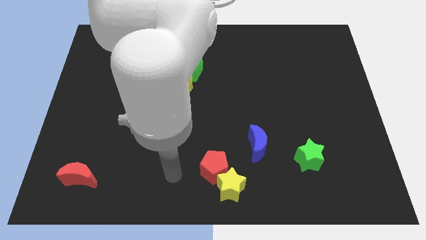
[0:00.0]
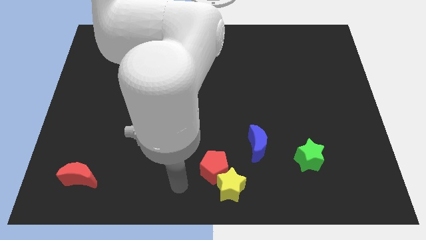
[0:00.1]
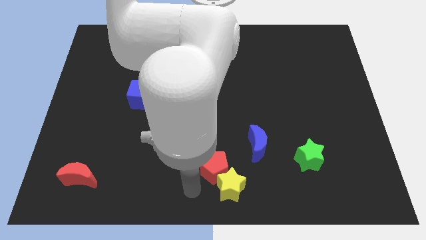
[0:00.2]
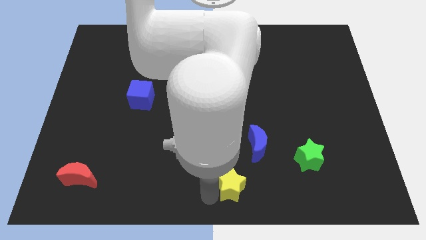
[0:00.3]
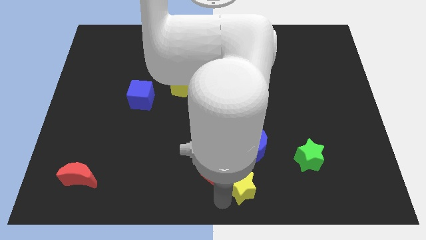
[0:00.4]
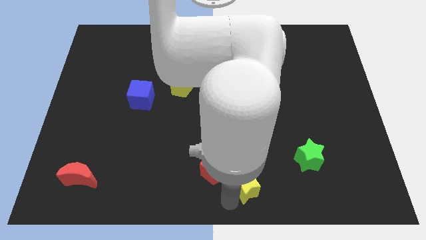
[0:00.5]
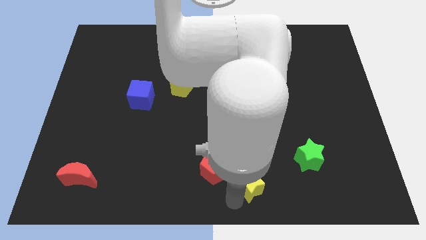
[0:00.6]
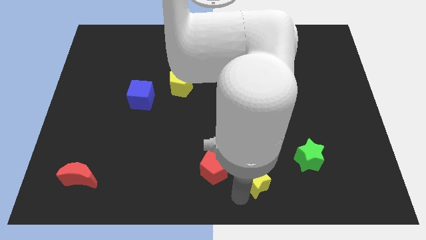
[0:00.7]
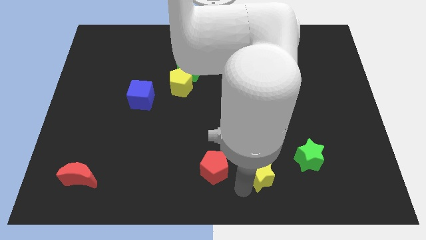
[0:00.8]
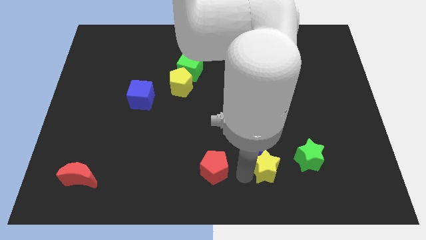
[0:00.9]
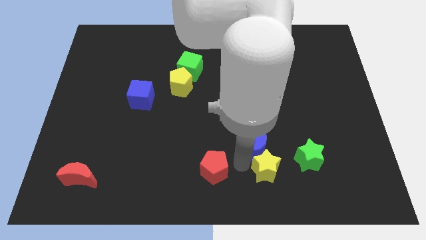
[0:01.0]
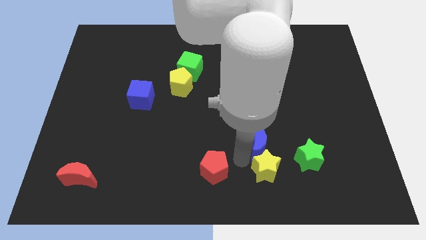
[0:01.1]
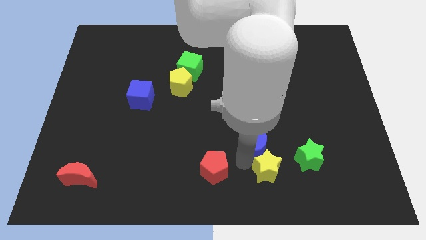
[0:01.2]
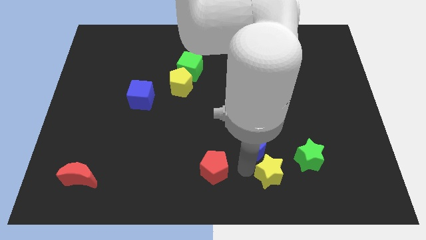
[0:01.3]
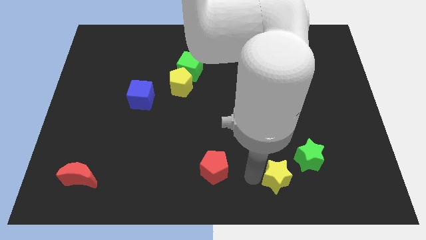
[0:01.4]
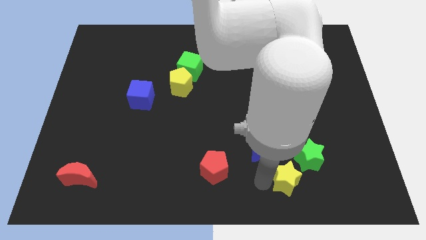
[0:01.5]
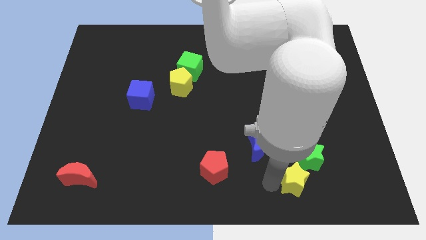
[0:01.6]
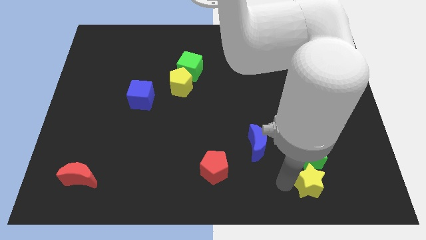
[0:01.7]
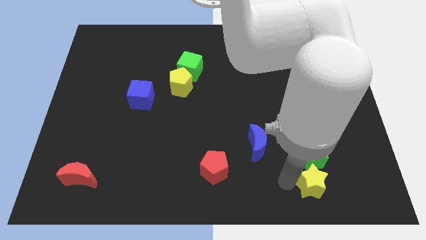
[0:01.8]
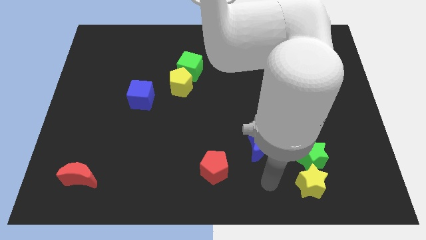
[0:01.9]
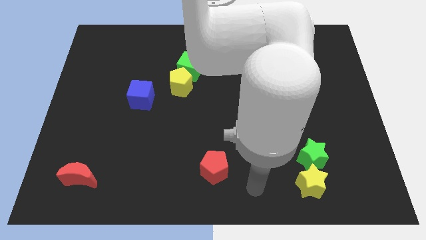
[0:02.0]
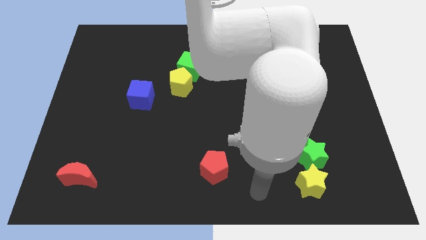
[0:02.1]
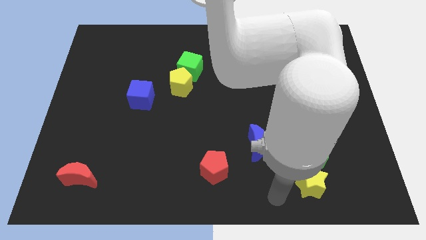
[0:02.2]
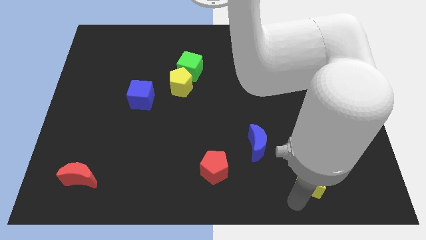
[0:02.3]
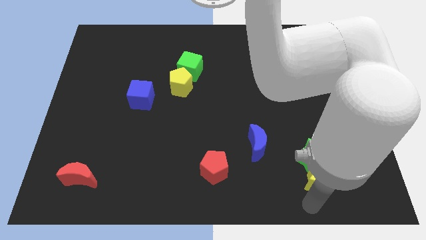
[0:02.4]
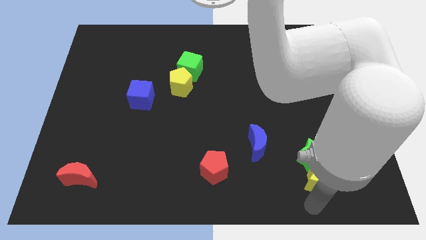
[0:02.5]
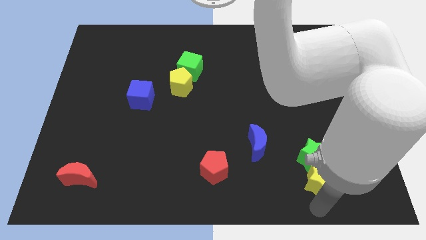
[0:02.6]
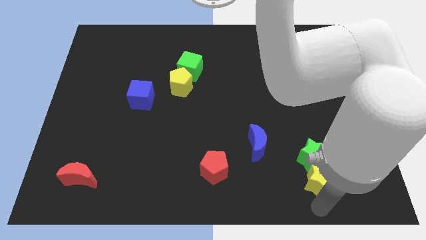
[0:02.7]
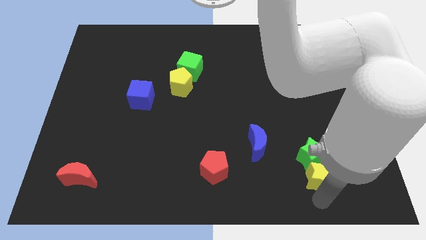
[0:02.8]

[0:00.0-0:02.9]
move yellow star below green star

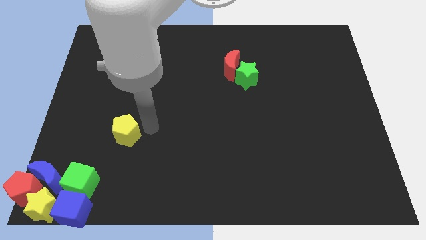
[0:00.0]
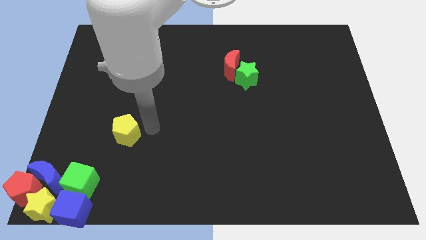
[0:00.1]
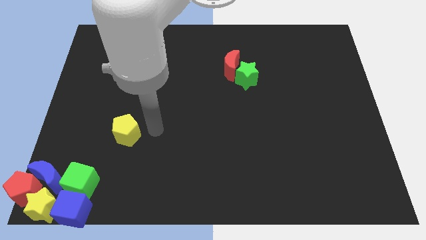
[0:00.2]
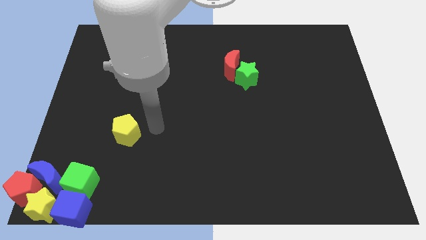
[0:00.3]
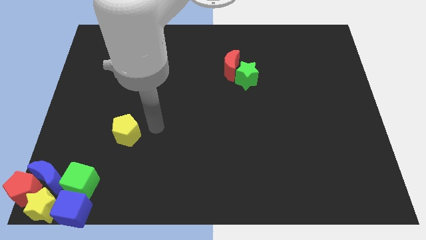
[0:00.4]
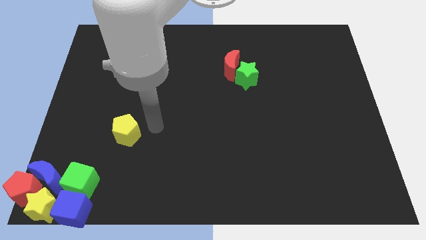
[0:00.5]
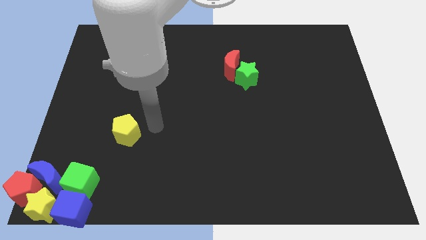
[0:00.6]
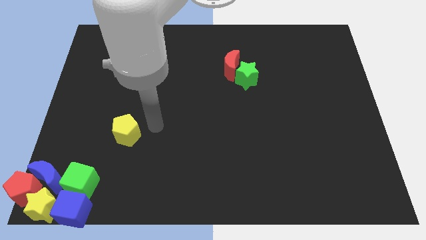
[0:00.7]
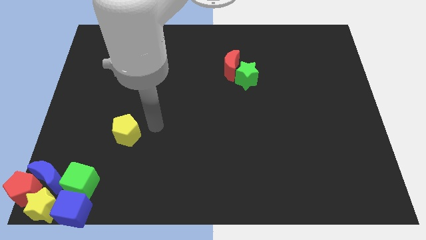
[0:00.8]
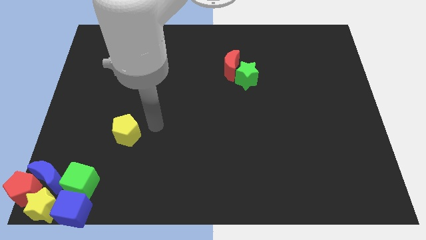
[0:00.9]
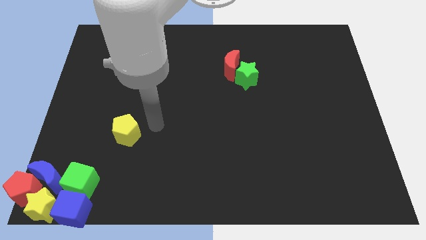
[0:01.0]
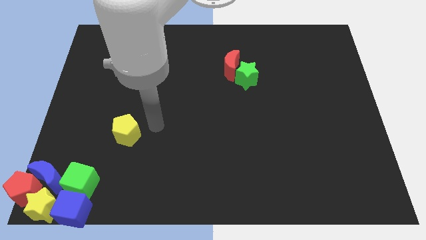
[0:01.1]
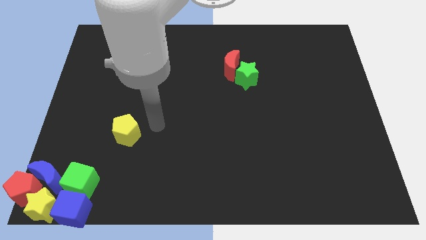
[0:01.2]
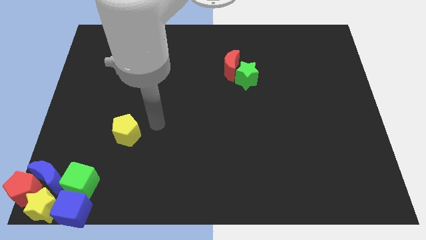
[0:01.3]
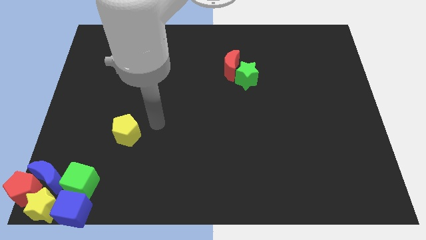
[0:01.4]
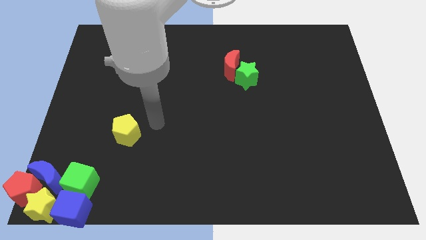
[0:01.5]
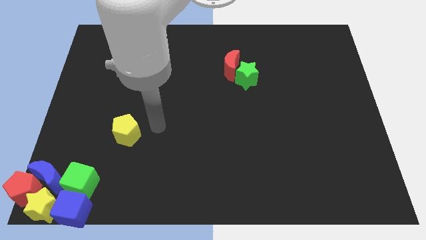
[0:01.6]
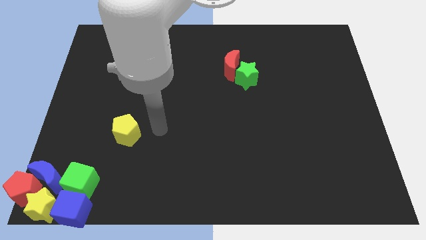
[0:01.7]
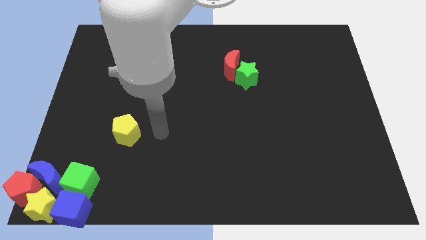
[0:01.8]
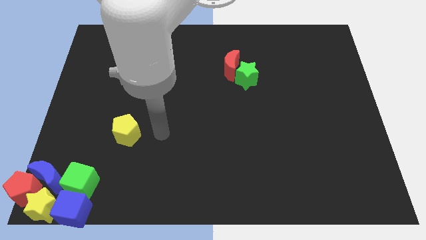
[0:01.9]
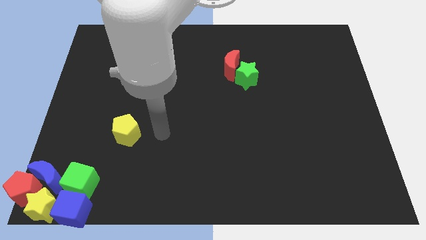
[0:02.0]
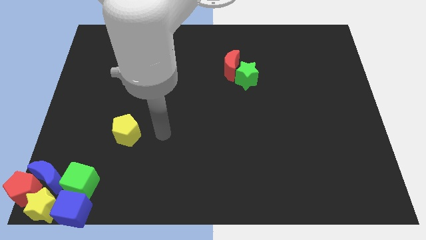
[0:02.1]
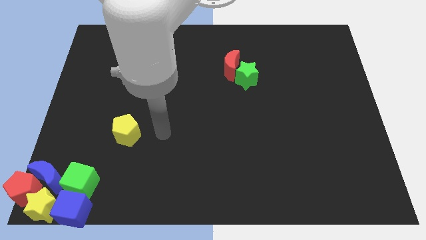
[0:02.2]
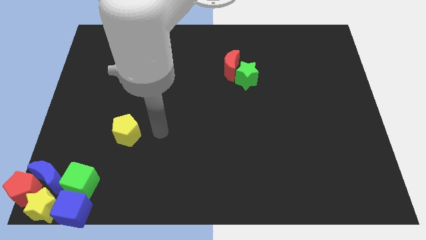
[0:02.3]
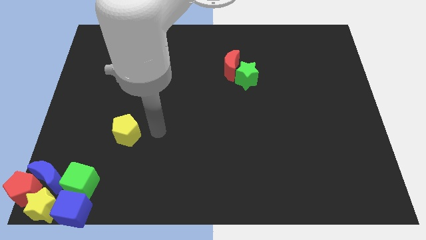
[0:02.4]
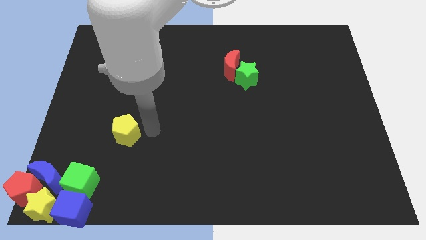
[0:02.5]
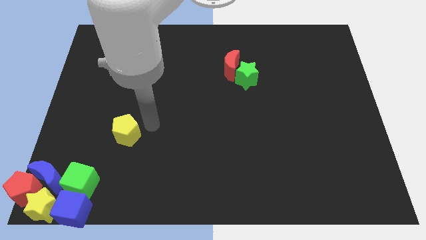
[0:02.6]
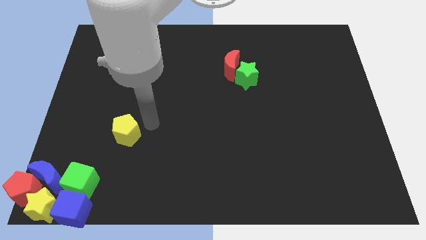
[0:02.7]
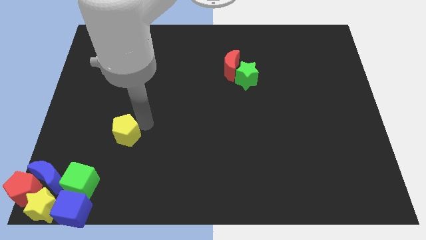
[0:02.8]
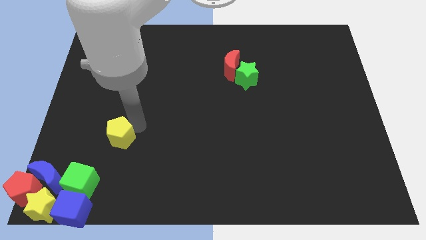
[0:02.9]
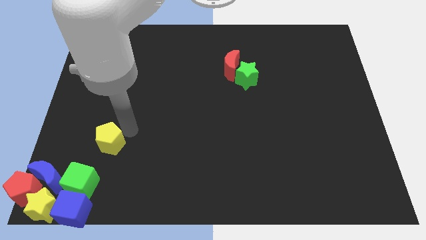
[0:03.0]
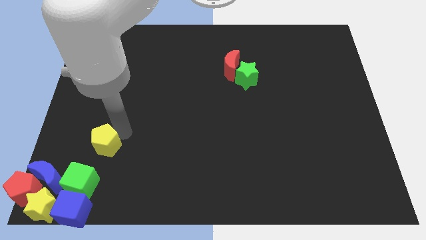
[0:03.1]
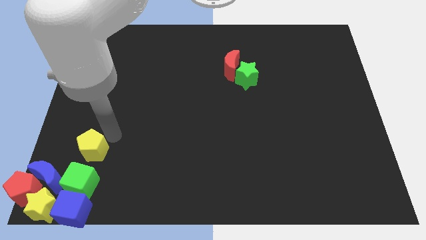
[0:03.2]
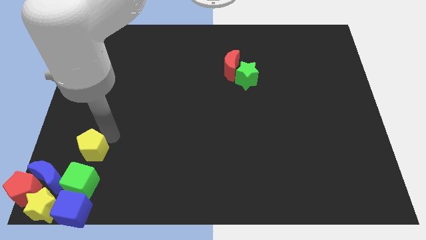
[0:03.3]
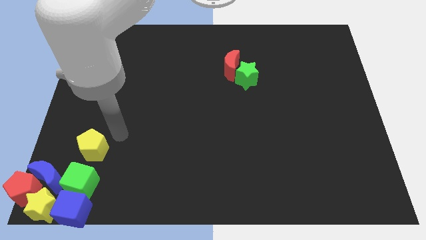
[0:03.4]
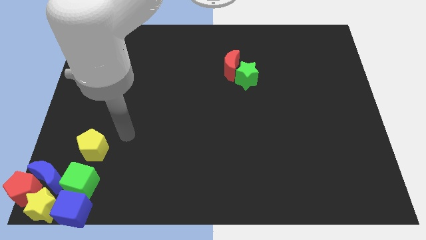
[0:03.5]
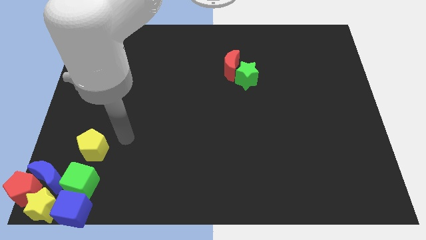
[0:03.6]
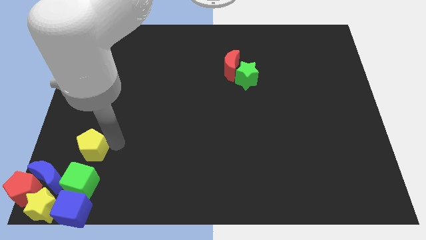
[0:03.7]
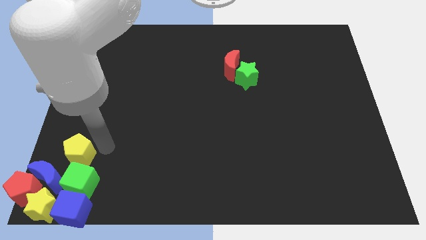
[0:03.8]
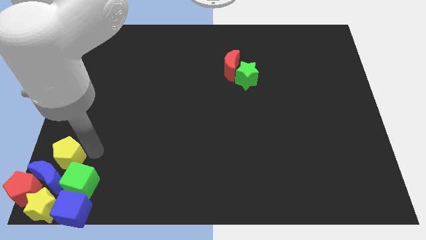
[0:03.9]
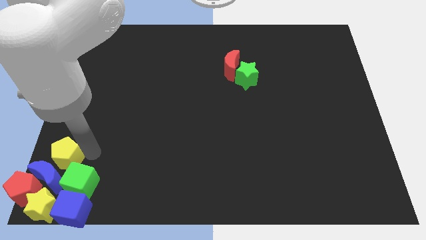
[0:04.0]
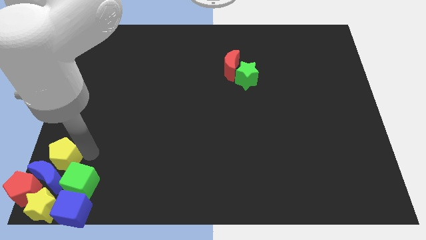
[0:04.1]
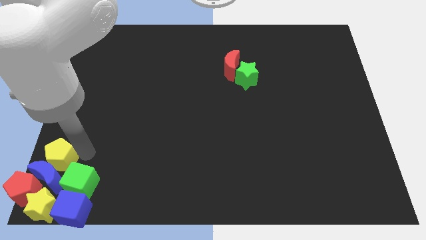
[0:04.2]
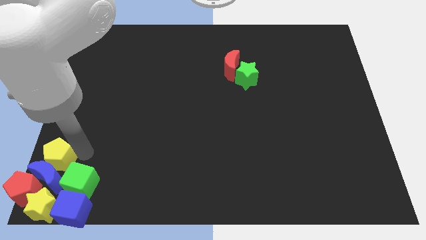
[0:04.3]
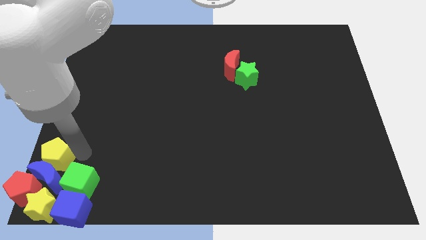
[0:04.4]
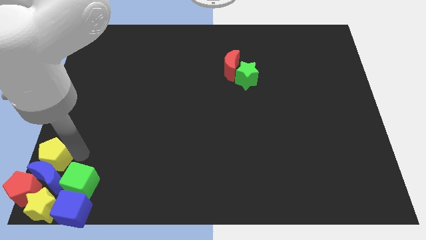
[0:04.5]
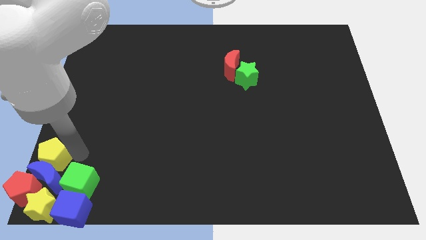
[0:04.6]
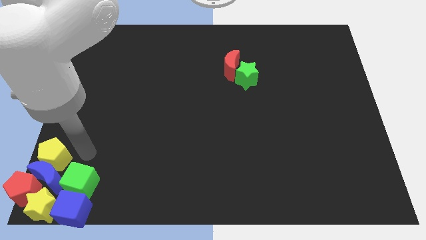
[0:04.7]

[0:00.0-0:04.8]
push the yellow pentagon into the top side of the blue crescent

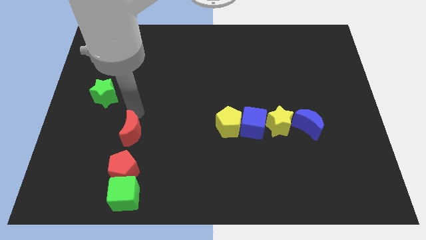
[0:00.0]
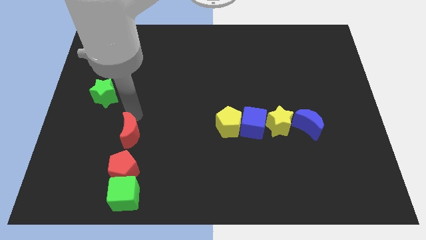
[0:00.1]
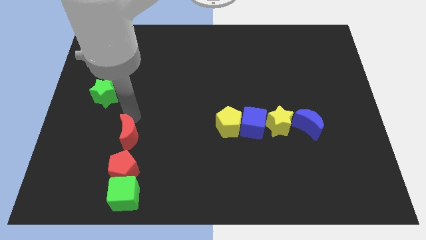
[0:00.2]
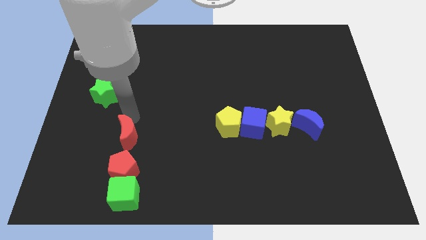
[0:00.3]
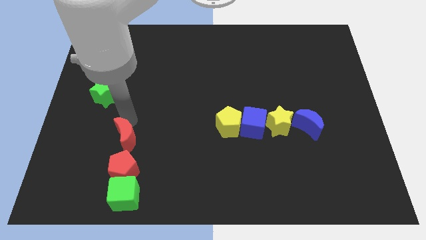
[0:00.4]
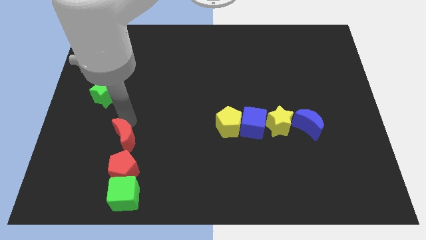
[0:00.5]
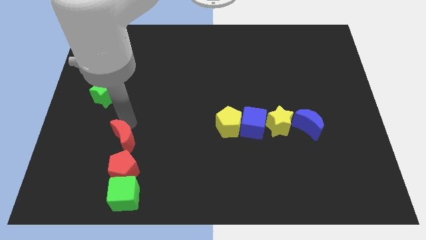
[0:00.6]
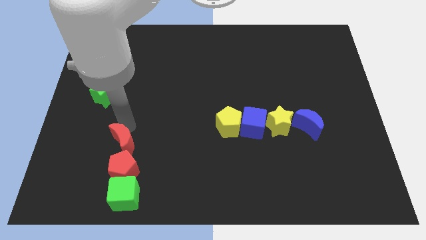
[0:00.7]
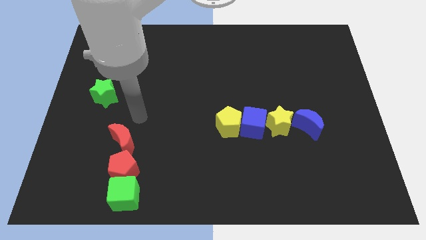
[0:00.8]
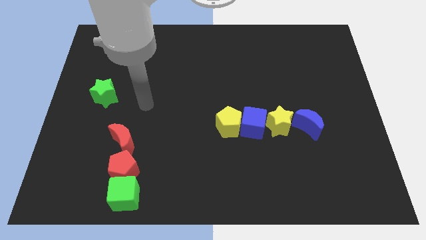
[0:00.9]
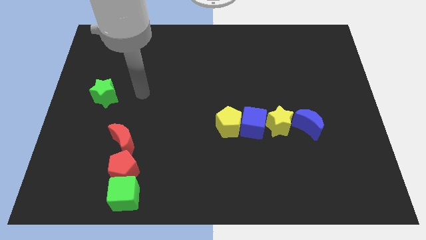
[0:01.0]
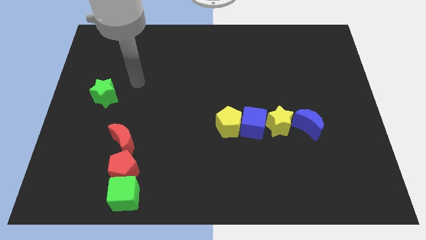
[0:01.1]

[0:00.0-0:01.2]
place the red crescent above the red pentagon
